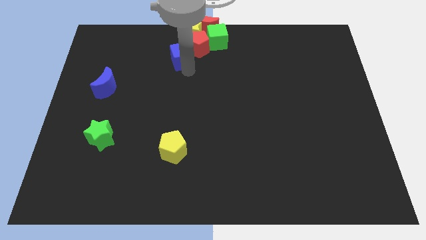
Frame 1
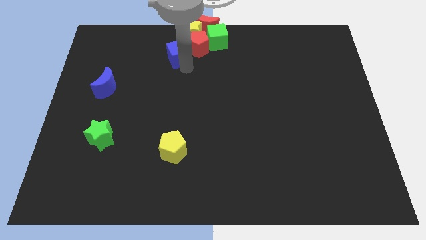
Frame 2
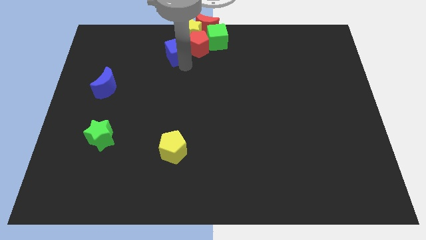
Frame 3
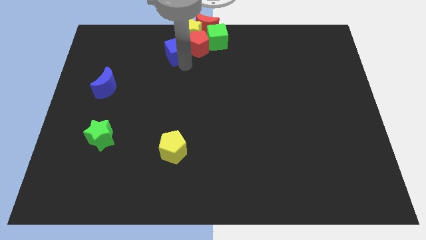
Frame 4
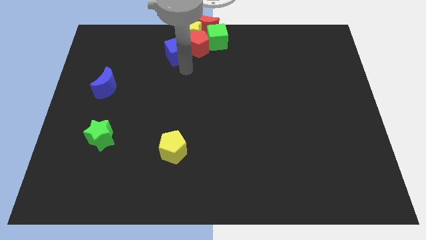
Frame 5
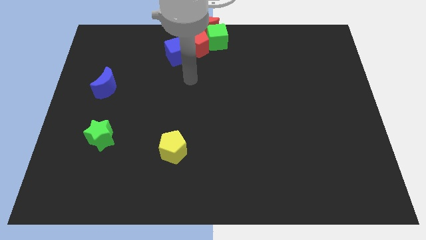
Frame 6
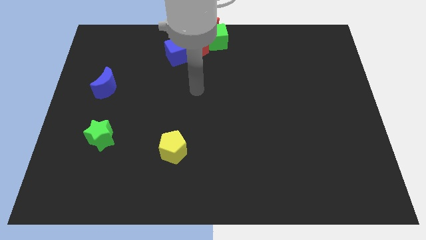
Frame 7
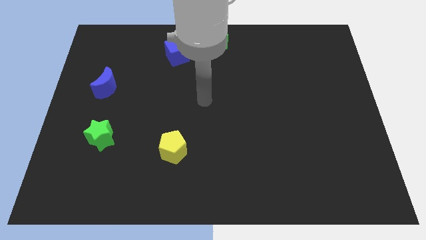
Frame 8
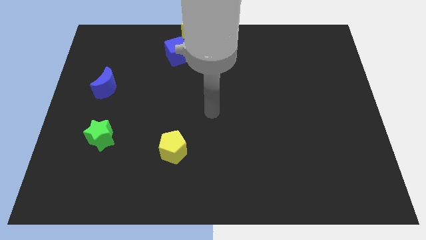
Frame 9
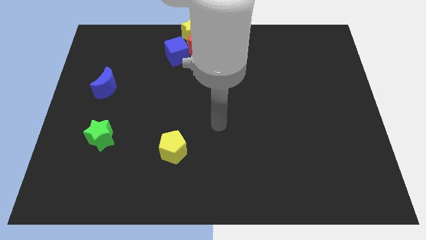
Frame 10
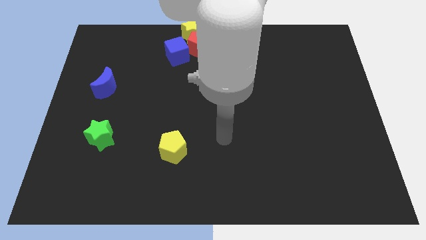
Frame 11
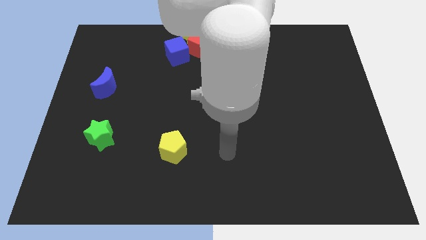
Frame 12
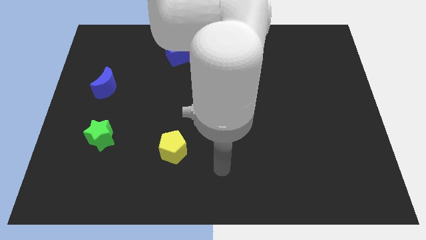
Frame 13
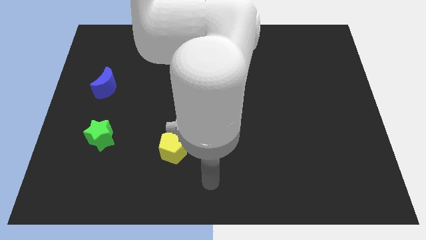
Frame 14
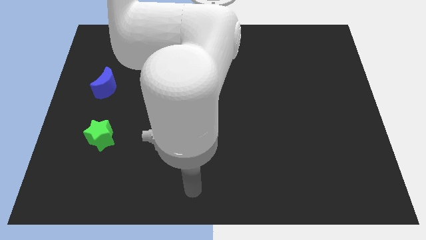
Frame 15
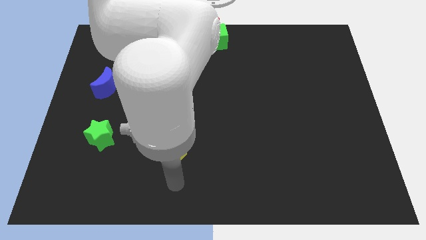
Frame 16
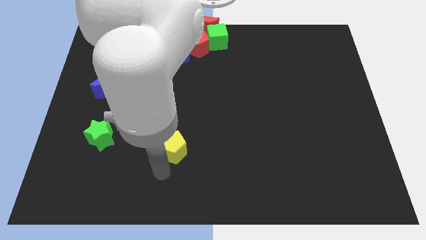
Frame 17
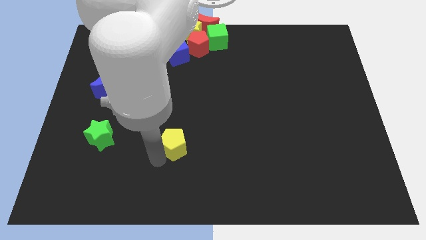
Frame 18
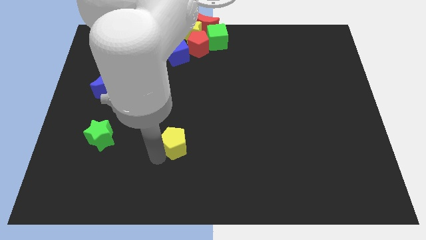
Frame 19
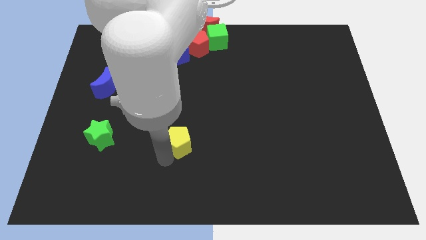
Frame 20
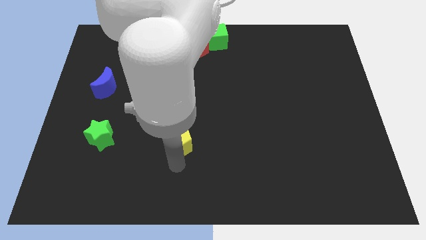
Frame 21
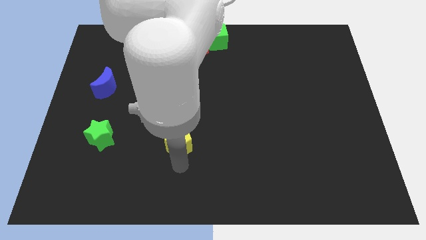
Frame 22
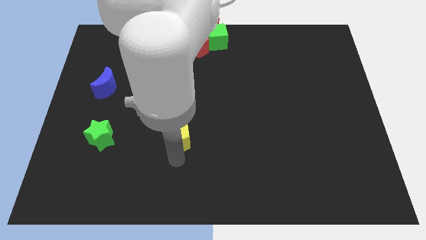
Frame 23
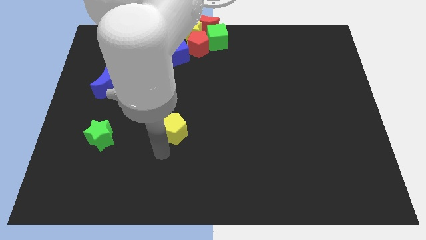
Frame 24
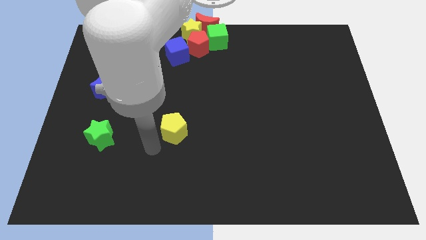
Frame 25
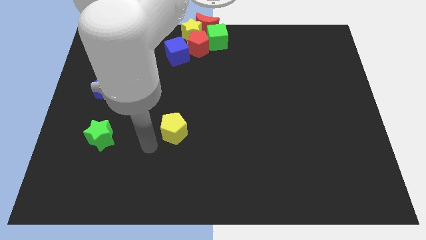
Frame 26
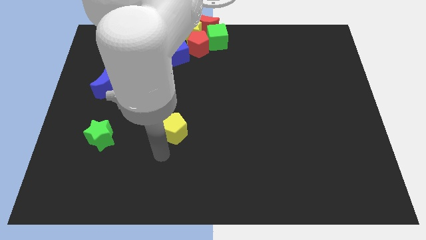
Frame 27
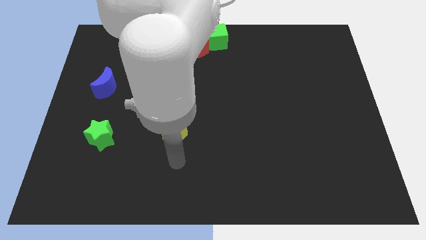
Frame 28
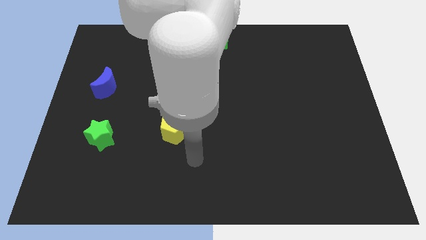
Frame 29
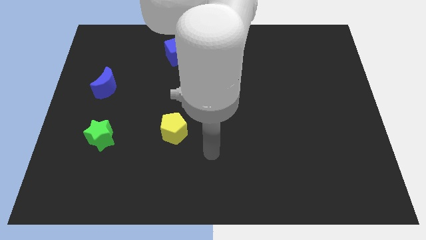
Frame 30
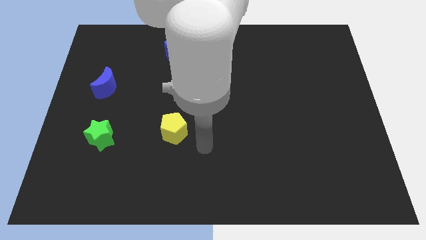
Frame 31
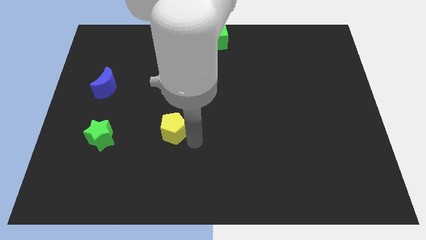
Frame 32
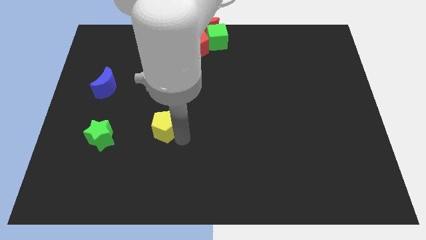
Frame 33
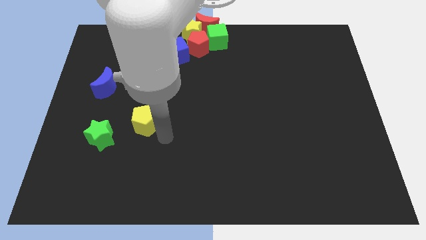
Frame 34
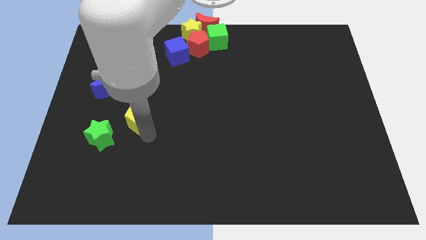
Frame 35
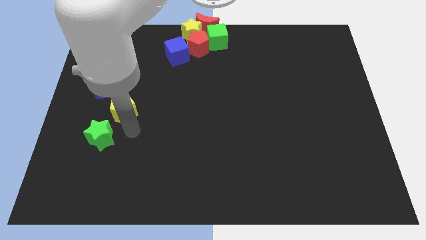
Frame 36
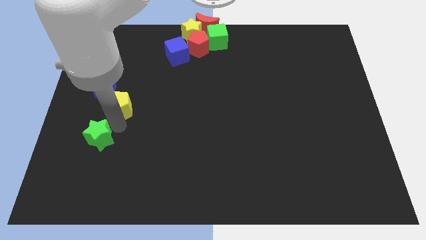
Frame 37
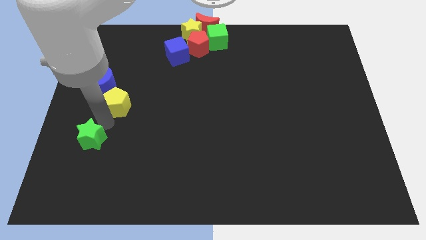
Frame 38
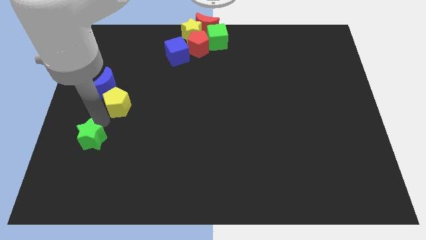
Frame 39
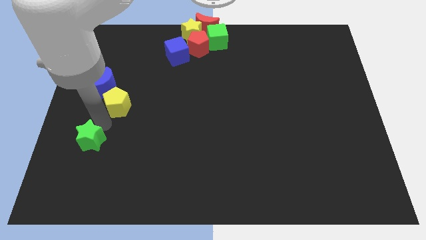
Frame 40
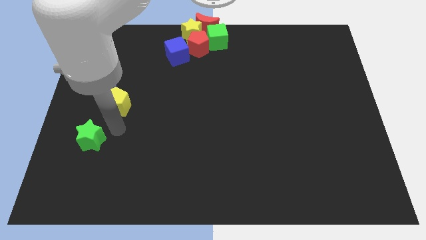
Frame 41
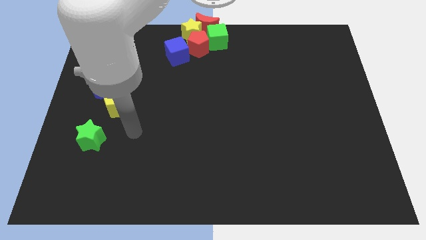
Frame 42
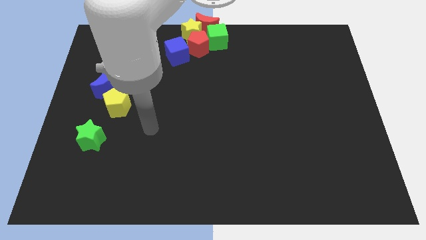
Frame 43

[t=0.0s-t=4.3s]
move the yellow pentagon to the bottom of the blue moon

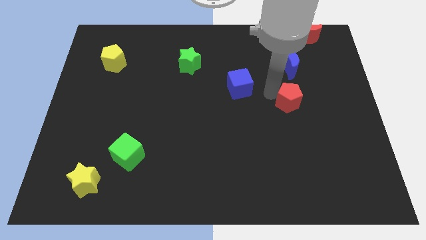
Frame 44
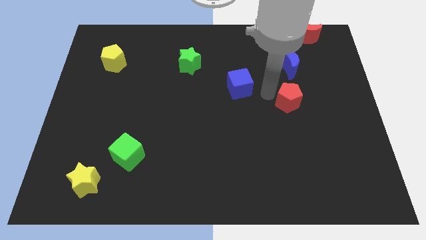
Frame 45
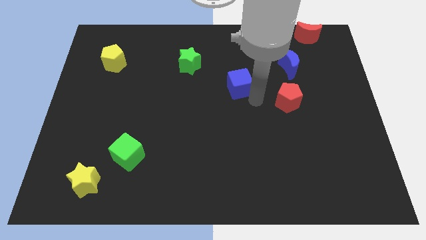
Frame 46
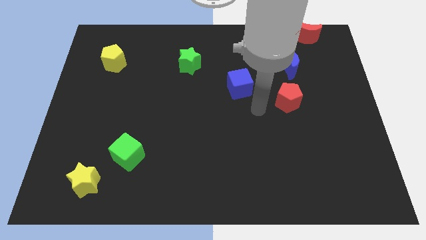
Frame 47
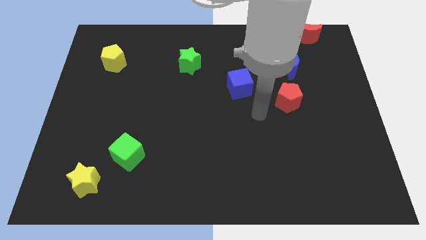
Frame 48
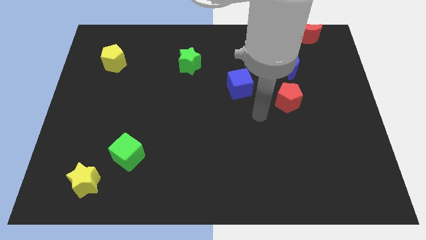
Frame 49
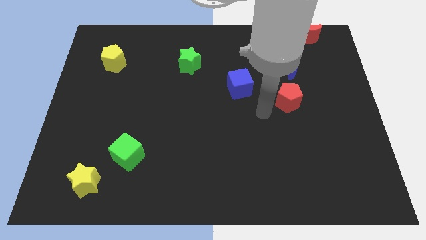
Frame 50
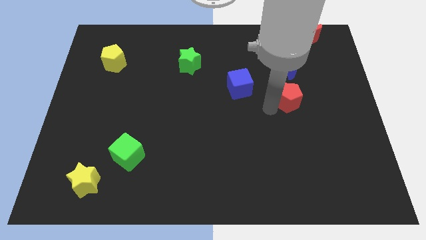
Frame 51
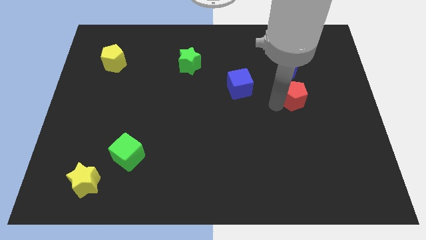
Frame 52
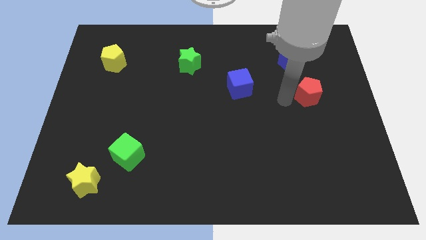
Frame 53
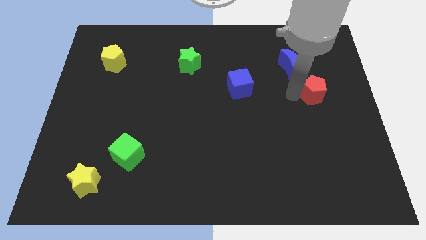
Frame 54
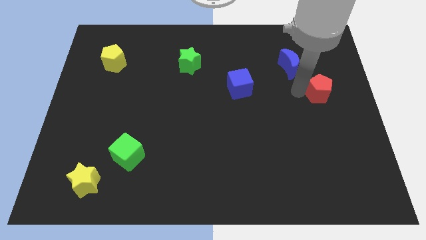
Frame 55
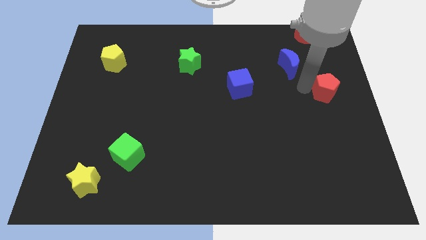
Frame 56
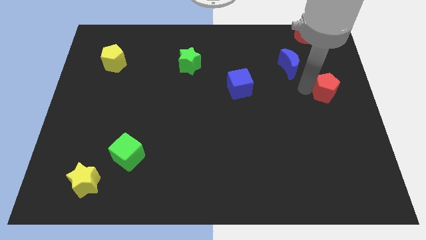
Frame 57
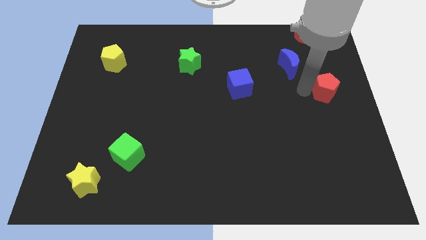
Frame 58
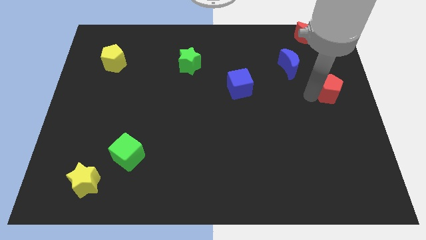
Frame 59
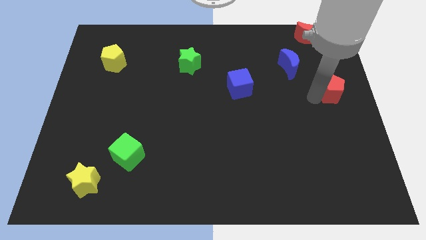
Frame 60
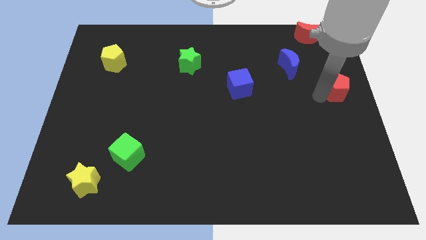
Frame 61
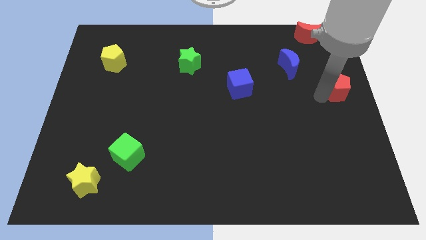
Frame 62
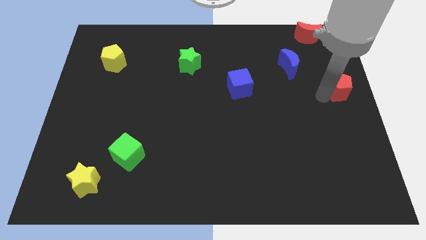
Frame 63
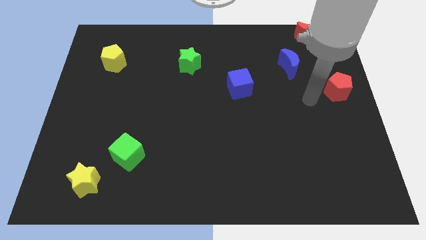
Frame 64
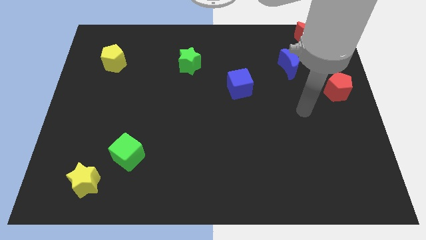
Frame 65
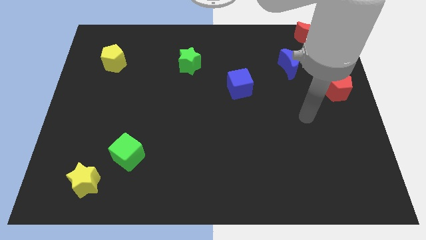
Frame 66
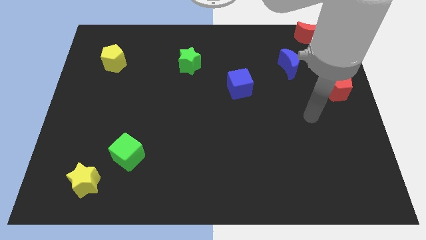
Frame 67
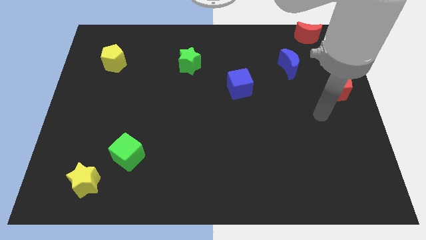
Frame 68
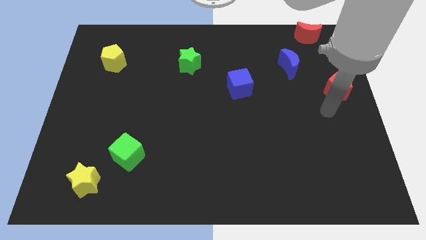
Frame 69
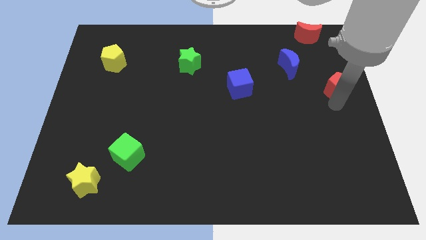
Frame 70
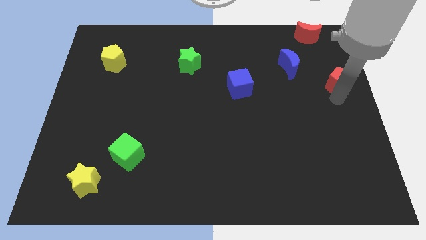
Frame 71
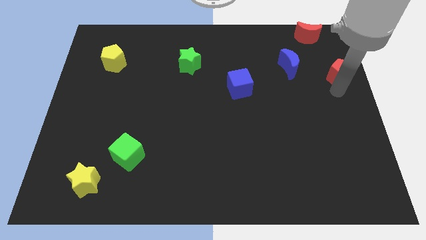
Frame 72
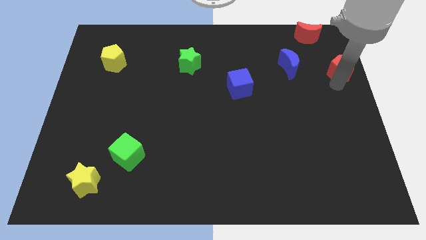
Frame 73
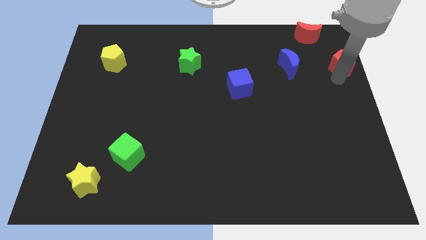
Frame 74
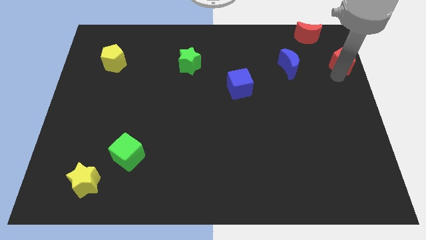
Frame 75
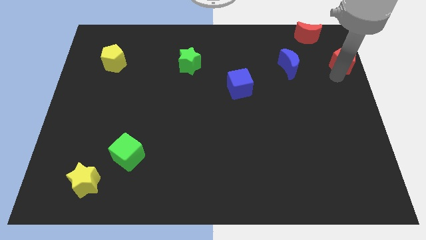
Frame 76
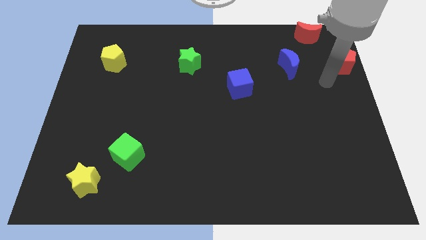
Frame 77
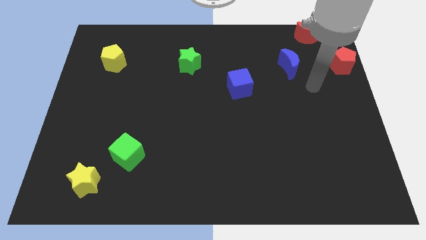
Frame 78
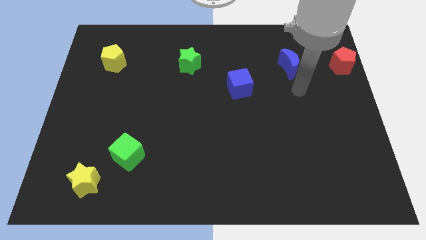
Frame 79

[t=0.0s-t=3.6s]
place the red pentagon right to the blue moon

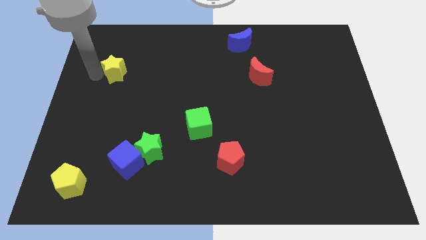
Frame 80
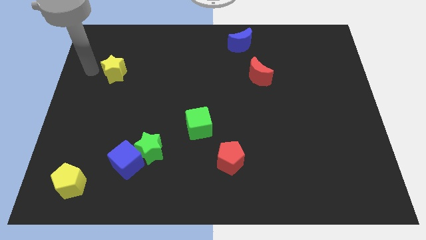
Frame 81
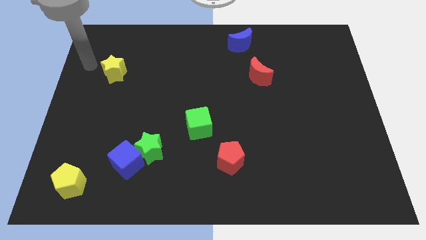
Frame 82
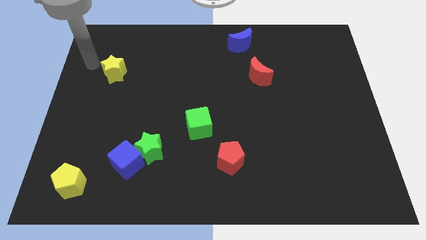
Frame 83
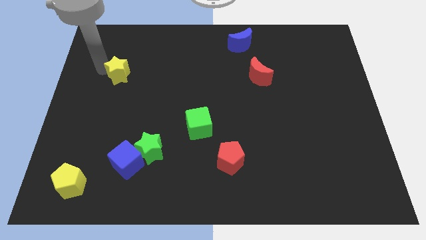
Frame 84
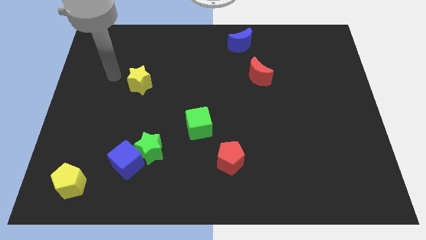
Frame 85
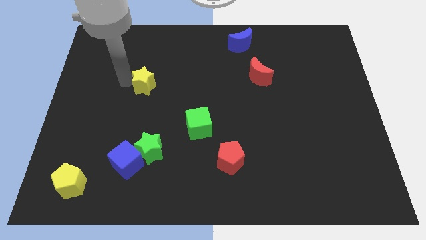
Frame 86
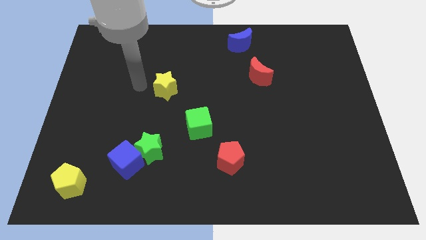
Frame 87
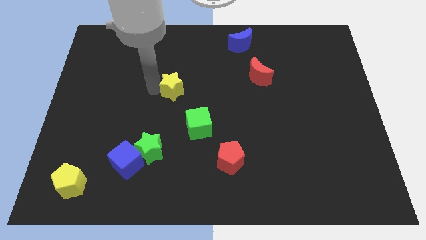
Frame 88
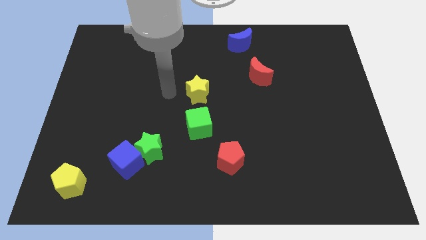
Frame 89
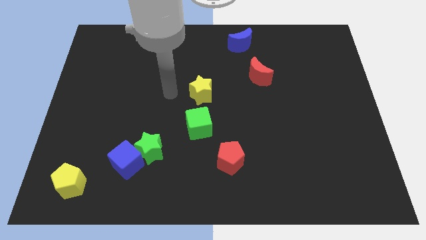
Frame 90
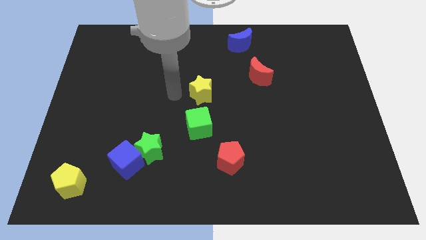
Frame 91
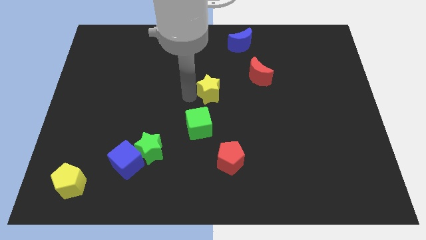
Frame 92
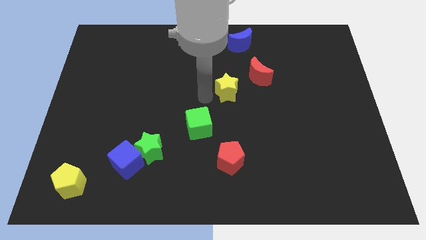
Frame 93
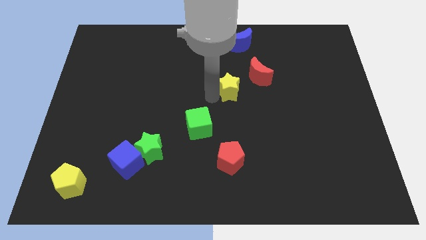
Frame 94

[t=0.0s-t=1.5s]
move the yellow star towards the left side of the red moon
